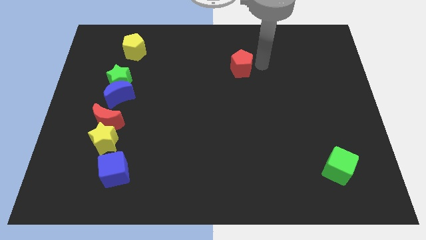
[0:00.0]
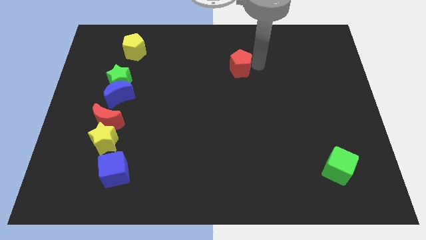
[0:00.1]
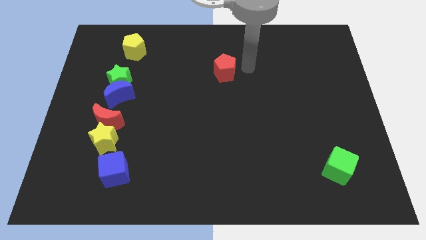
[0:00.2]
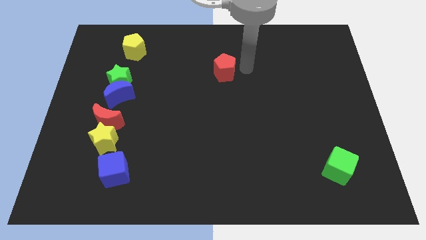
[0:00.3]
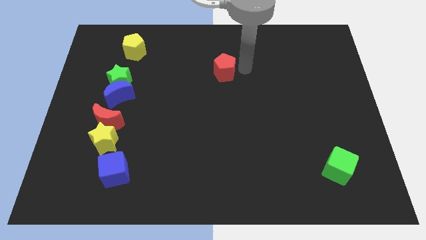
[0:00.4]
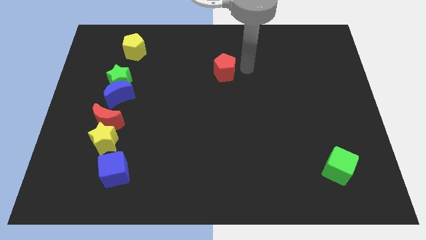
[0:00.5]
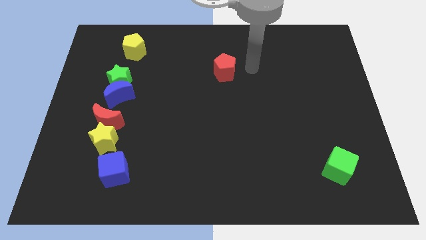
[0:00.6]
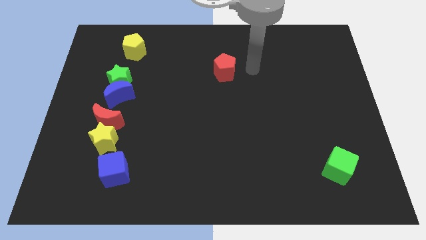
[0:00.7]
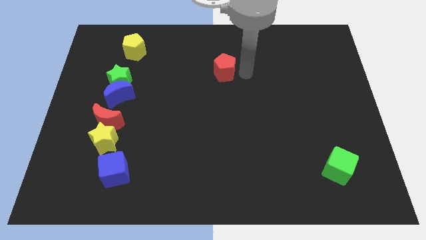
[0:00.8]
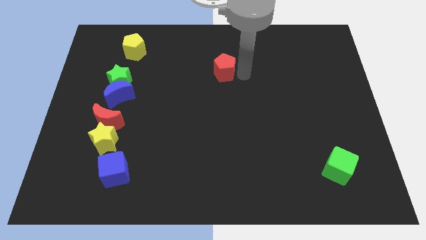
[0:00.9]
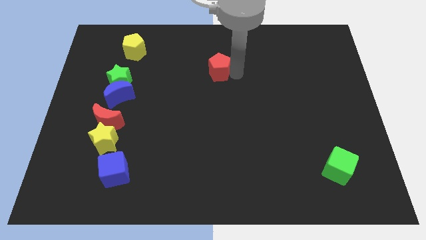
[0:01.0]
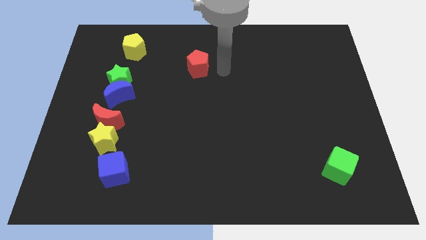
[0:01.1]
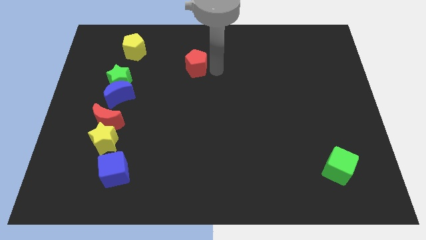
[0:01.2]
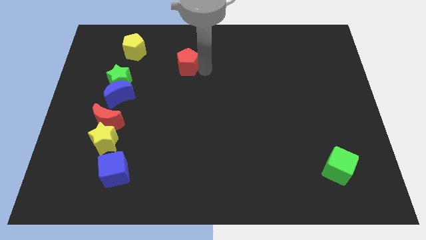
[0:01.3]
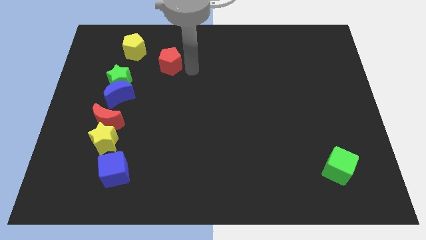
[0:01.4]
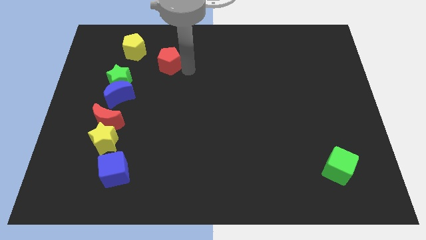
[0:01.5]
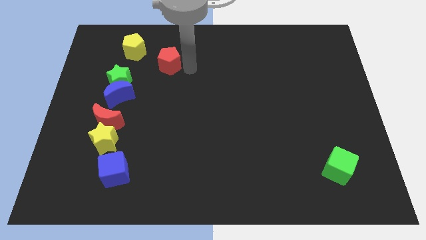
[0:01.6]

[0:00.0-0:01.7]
drag the red pentagon towards the yellow pentagon

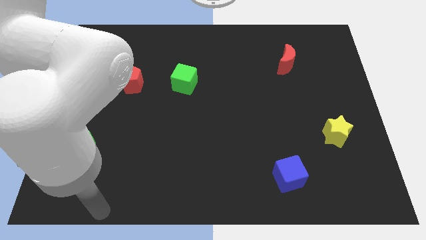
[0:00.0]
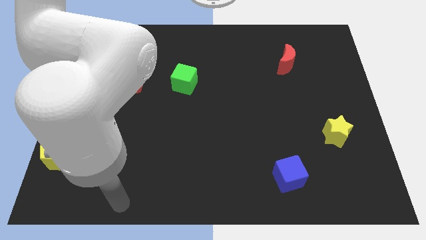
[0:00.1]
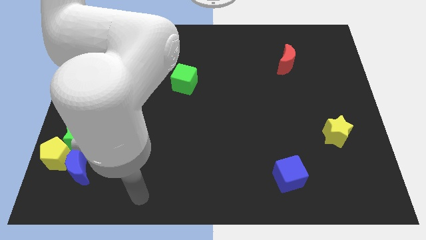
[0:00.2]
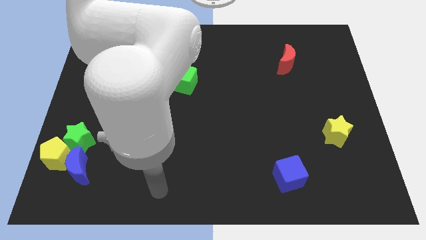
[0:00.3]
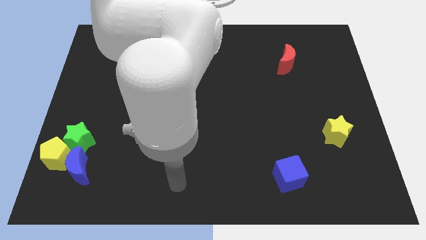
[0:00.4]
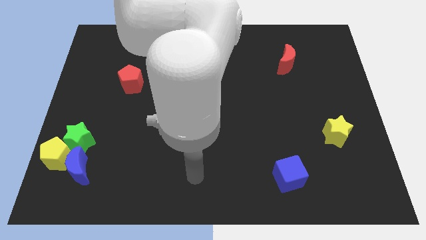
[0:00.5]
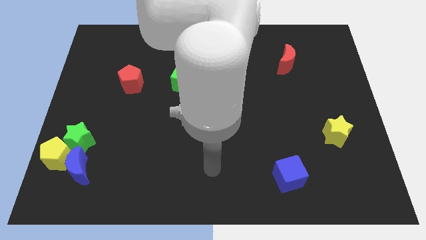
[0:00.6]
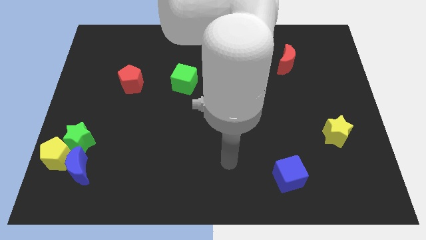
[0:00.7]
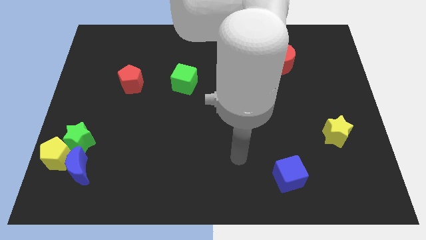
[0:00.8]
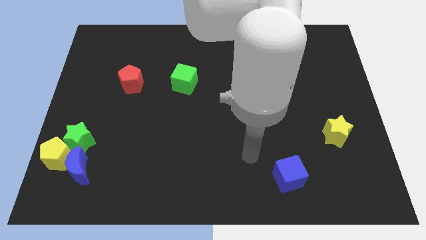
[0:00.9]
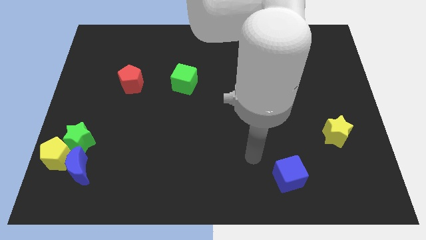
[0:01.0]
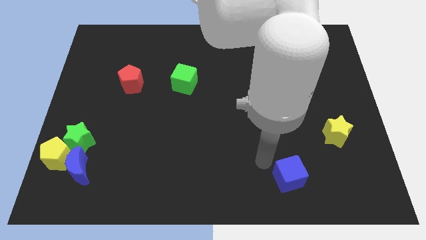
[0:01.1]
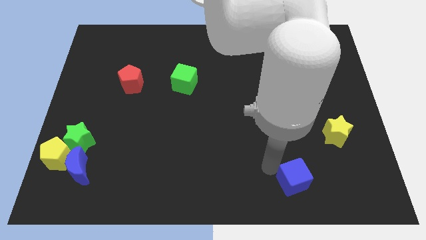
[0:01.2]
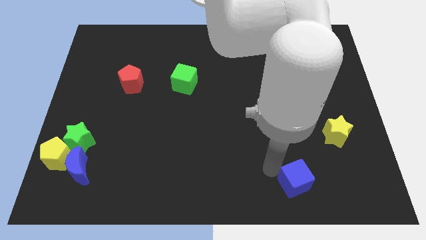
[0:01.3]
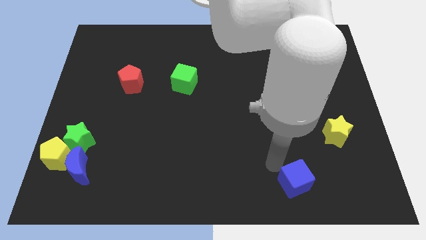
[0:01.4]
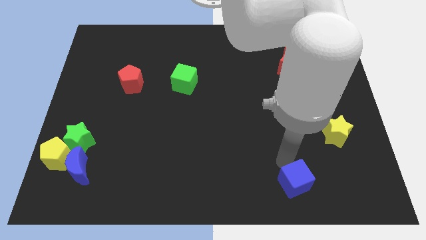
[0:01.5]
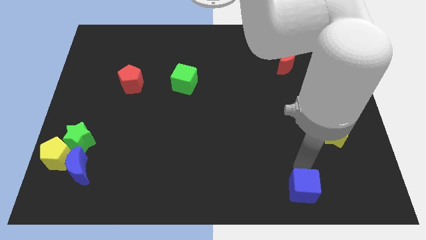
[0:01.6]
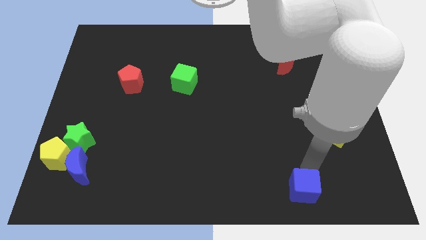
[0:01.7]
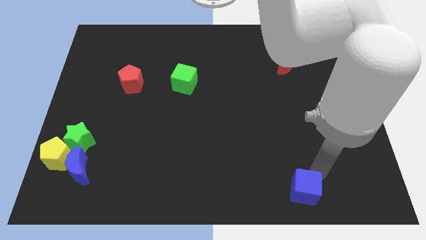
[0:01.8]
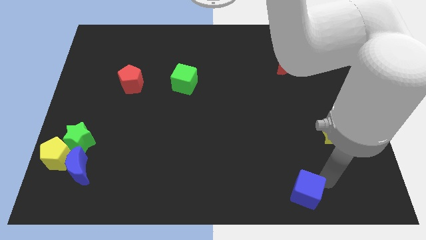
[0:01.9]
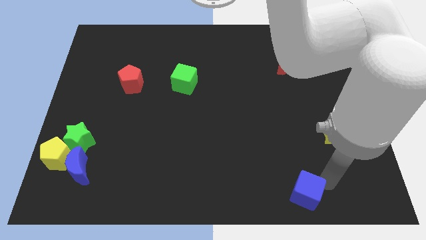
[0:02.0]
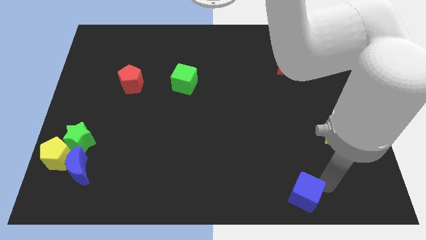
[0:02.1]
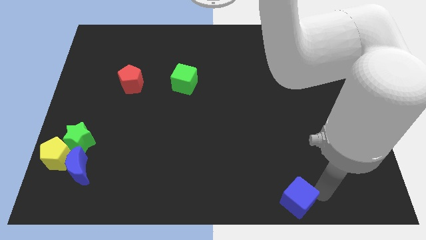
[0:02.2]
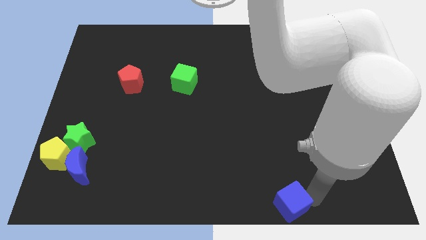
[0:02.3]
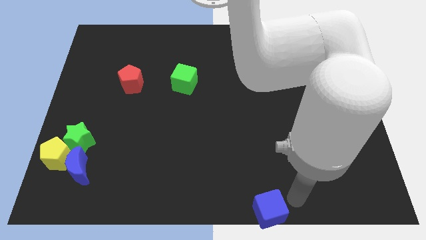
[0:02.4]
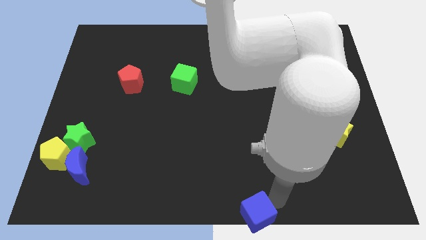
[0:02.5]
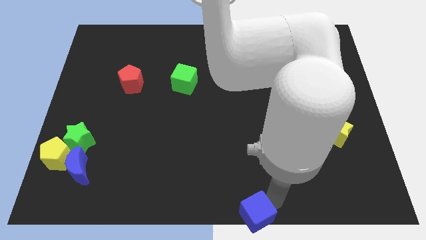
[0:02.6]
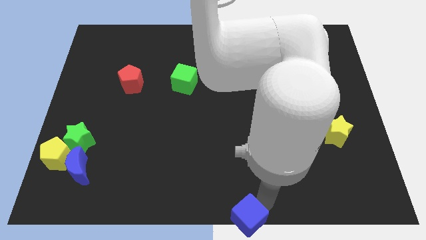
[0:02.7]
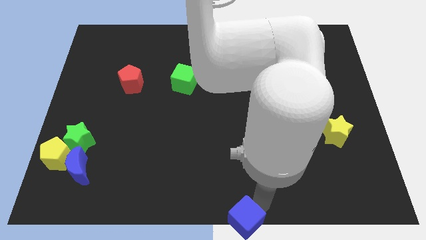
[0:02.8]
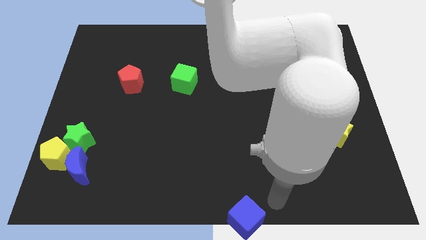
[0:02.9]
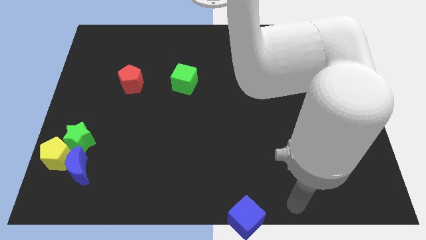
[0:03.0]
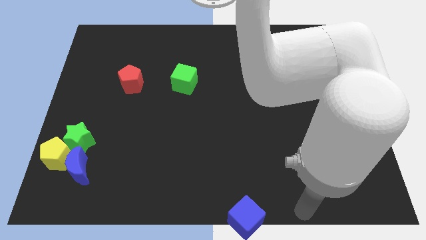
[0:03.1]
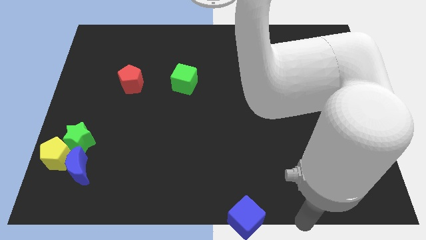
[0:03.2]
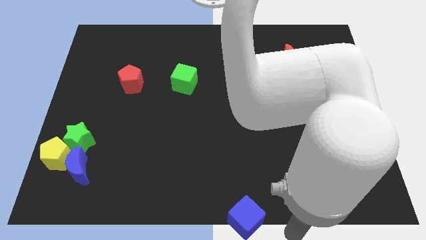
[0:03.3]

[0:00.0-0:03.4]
push the blue cube to the bottom center of the board

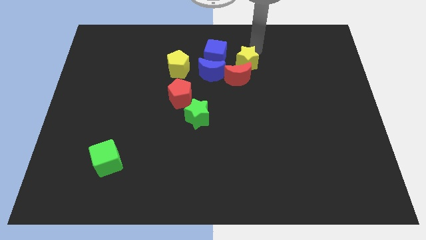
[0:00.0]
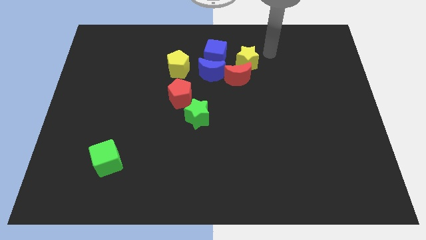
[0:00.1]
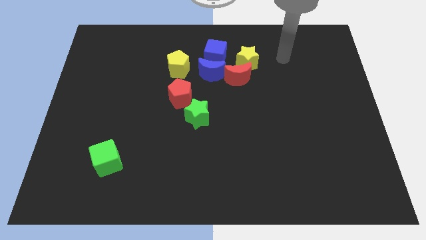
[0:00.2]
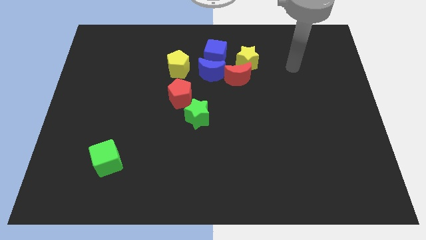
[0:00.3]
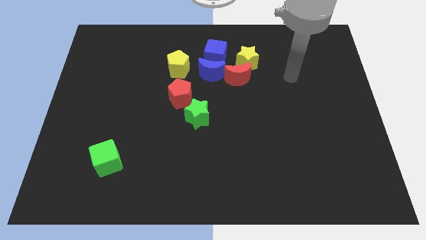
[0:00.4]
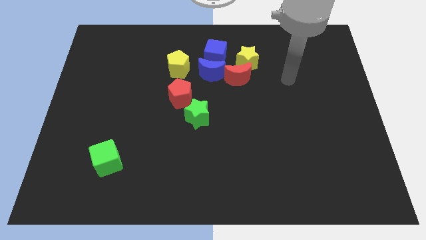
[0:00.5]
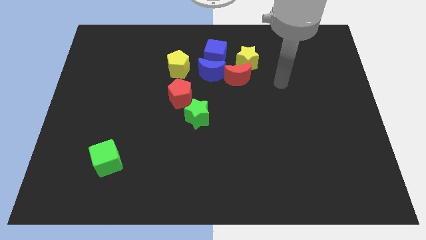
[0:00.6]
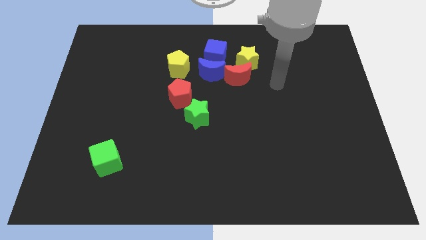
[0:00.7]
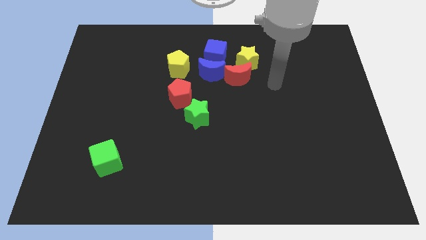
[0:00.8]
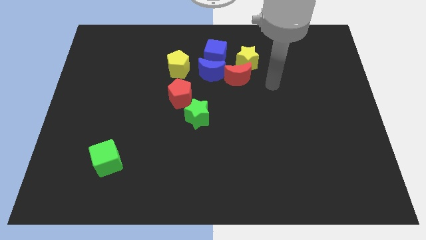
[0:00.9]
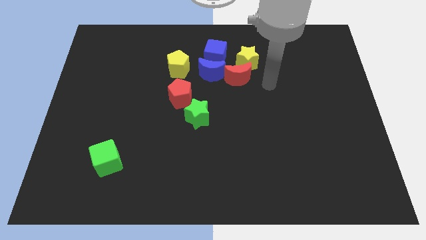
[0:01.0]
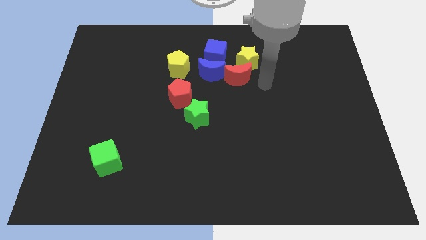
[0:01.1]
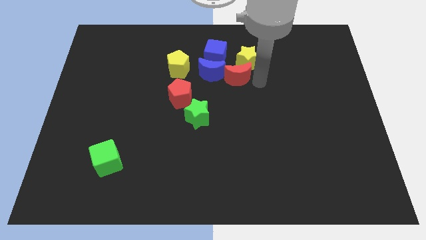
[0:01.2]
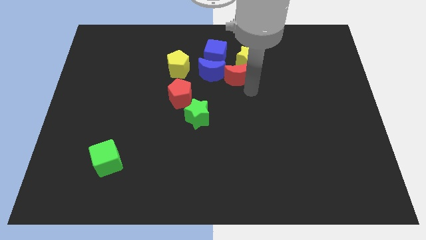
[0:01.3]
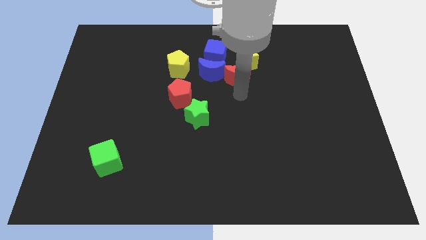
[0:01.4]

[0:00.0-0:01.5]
move your arm away from the yellow star

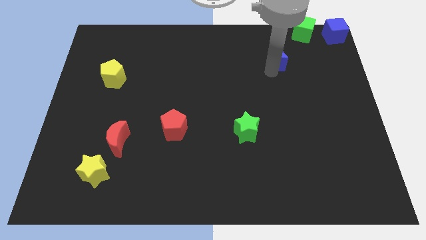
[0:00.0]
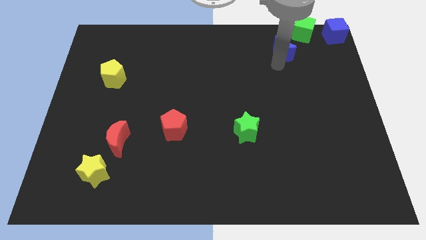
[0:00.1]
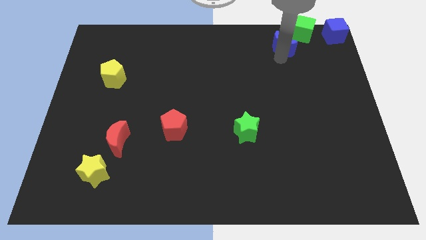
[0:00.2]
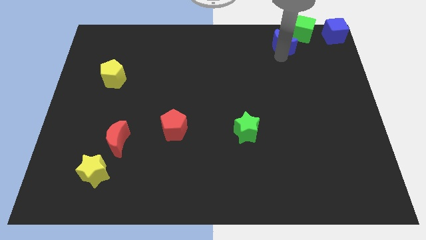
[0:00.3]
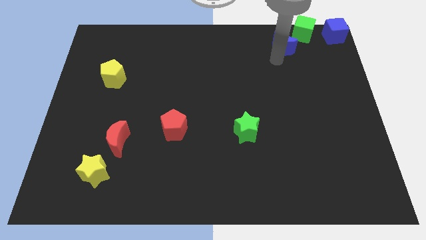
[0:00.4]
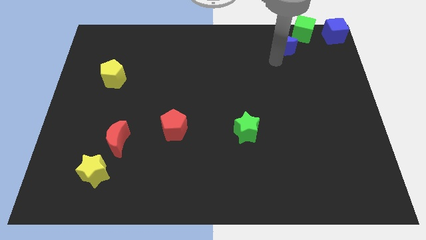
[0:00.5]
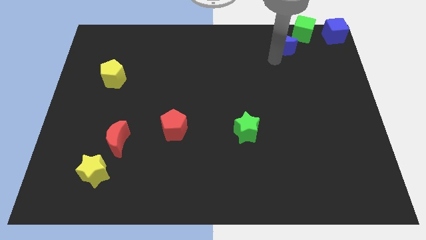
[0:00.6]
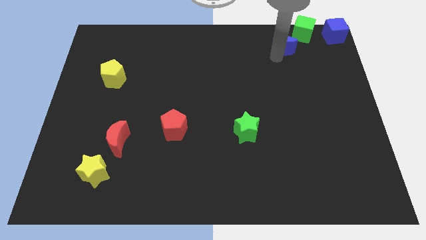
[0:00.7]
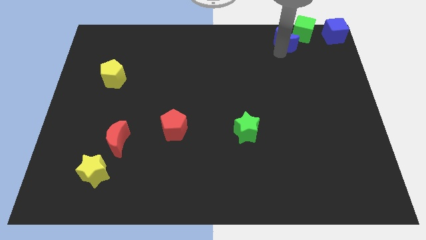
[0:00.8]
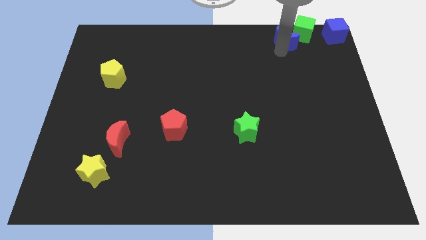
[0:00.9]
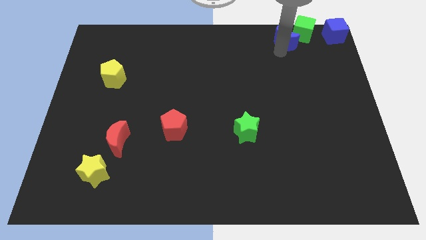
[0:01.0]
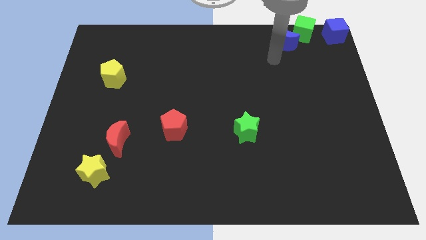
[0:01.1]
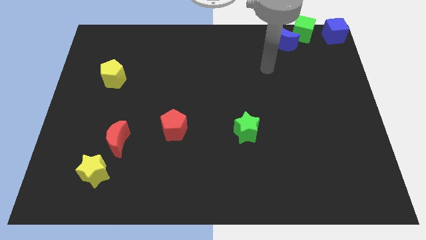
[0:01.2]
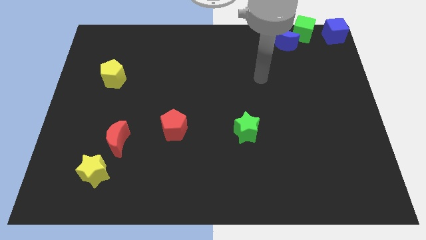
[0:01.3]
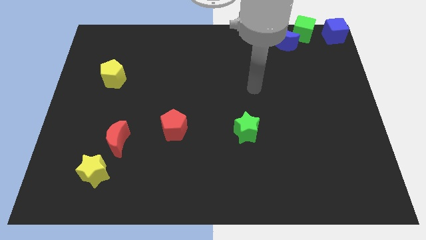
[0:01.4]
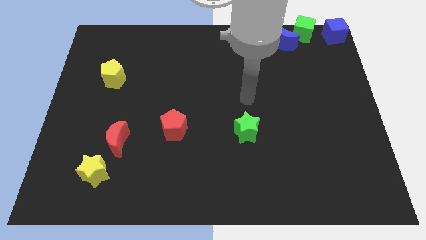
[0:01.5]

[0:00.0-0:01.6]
push the blue moon to the bottom left of the green cube

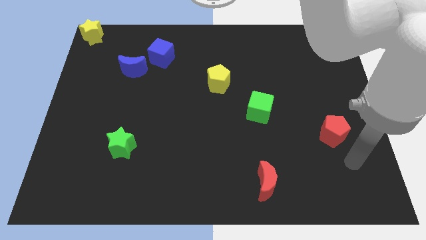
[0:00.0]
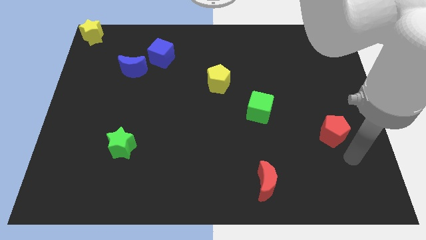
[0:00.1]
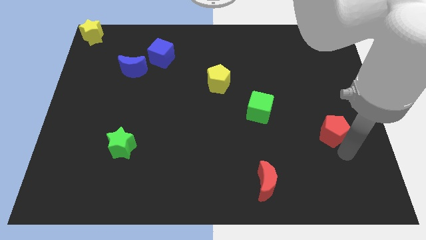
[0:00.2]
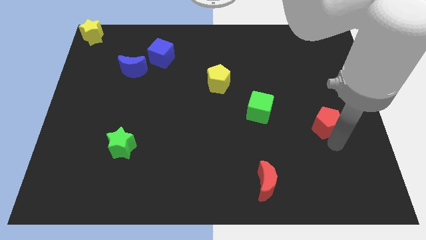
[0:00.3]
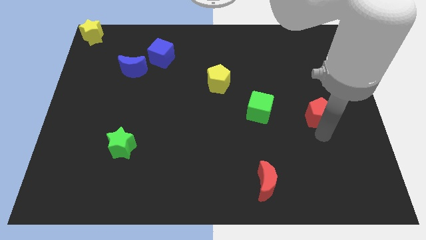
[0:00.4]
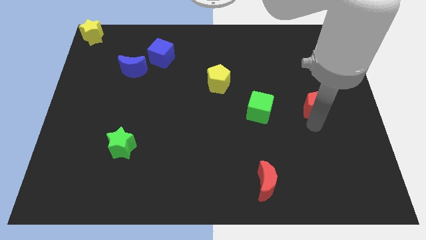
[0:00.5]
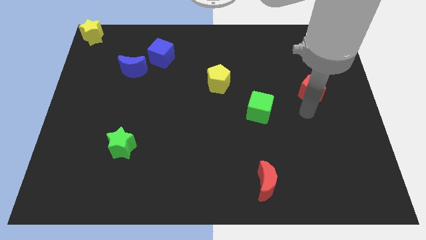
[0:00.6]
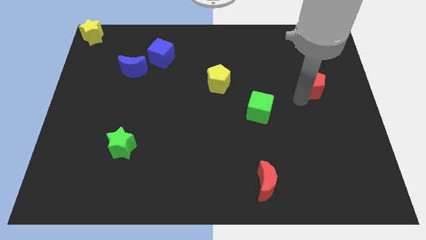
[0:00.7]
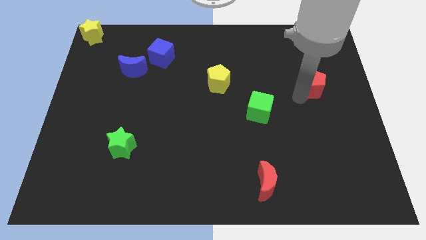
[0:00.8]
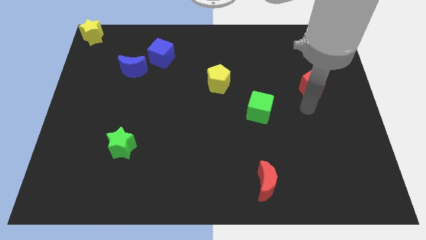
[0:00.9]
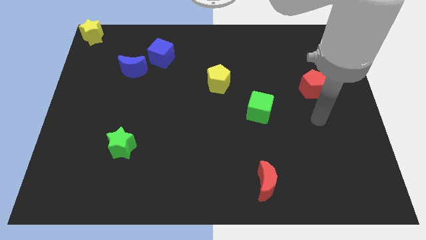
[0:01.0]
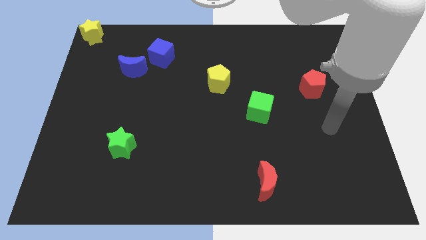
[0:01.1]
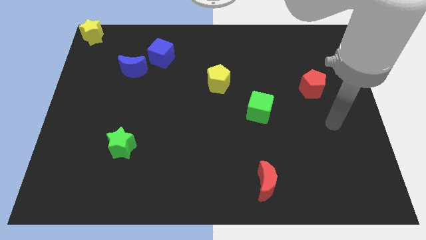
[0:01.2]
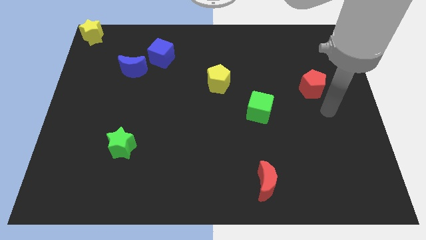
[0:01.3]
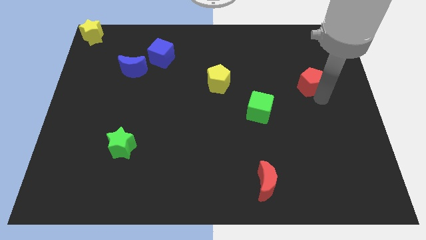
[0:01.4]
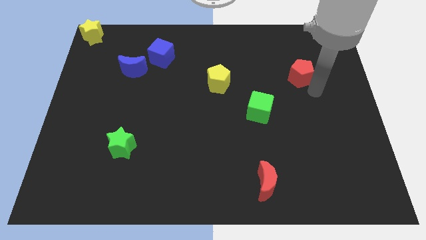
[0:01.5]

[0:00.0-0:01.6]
place the red pentagon diagoanlly to the top right of the green cube
